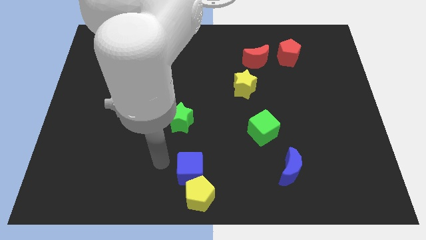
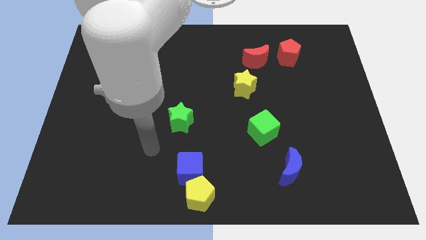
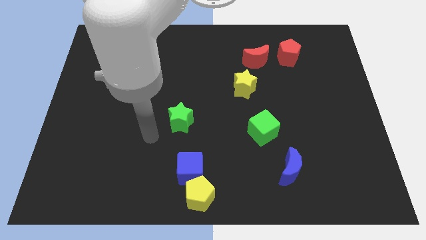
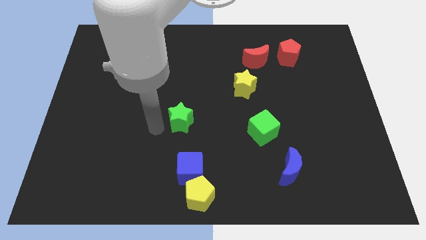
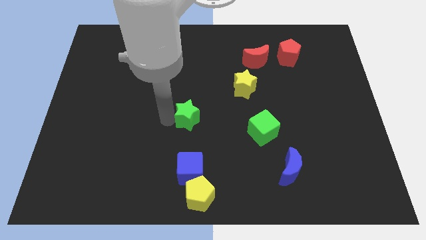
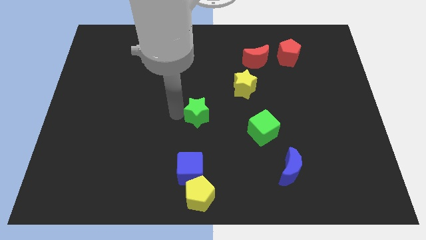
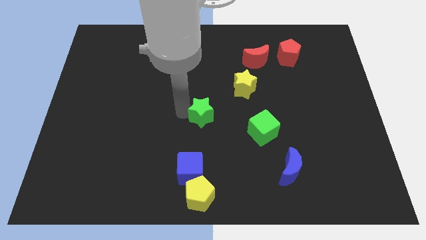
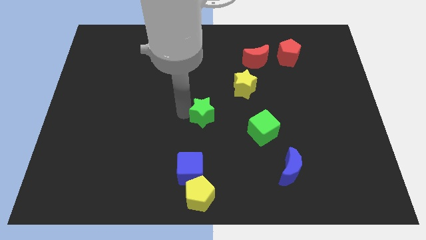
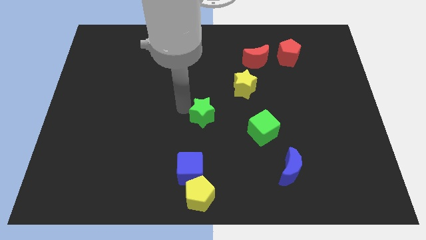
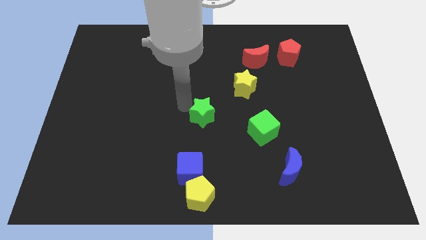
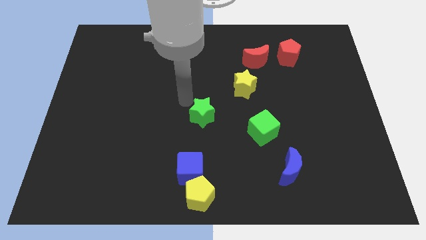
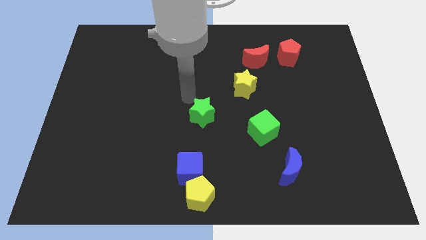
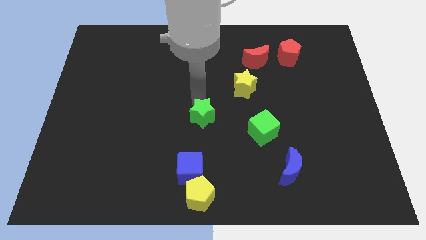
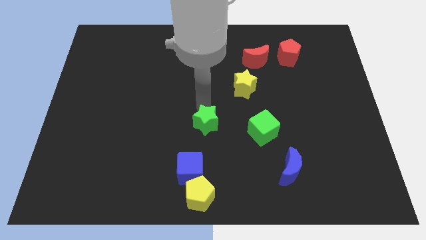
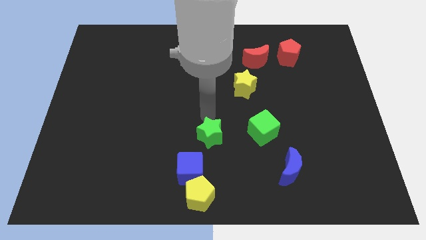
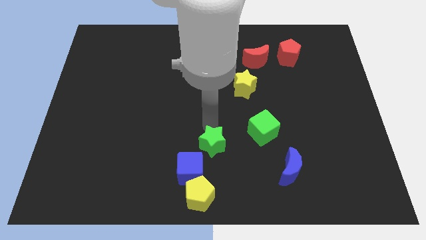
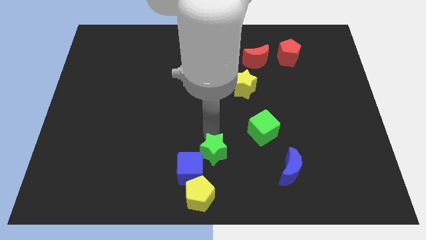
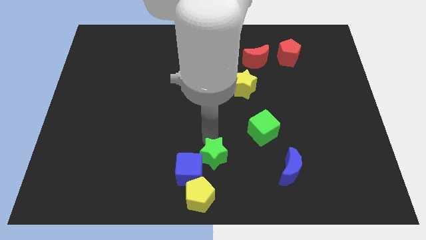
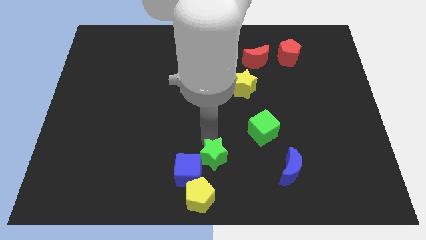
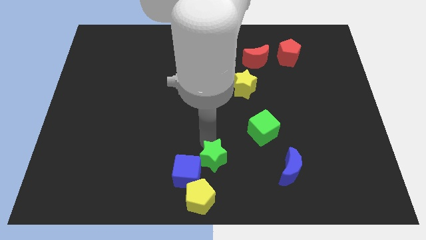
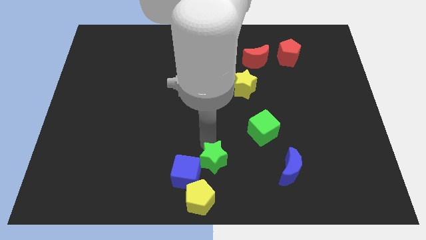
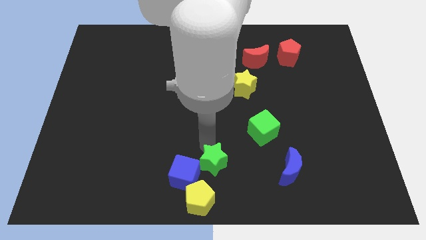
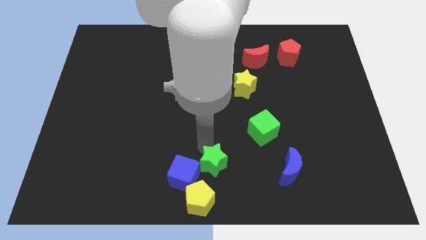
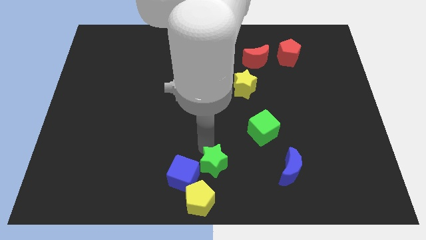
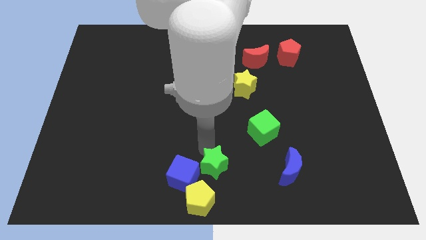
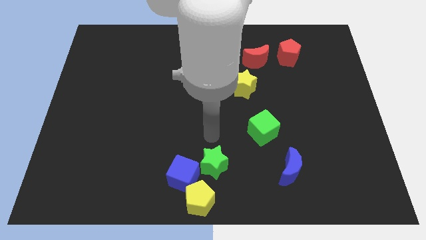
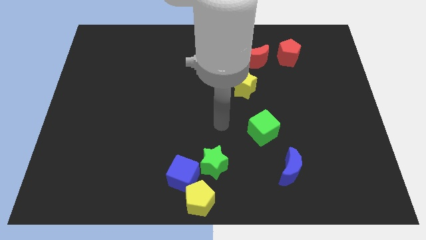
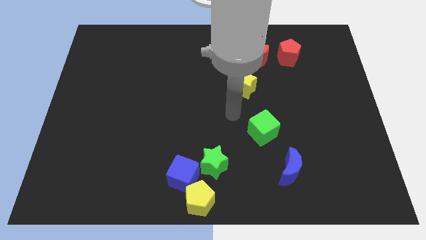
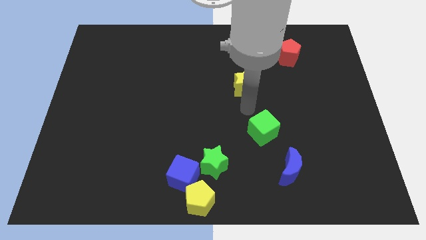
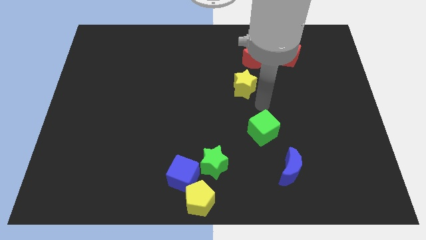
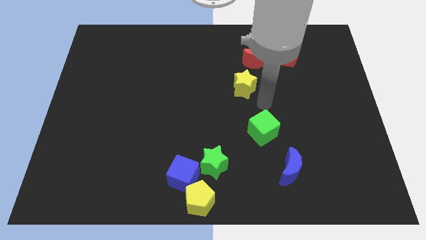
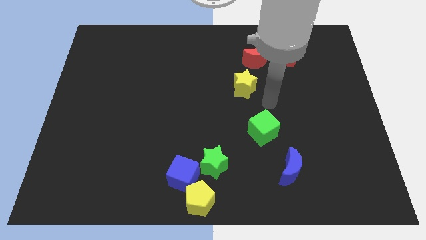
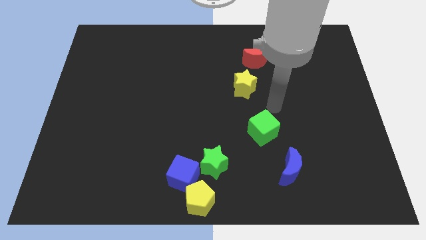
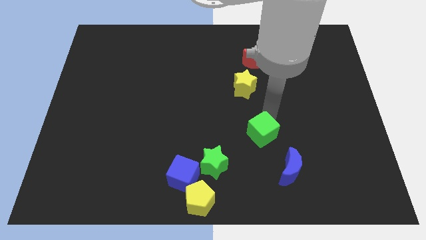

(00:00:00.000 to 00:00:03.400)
place the green star right to the blue cube

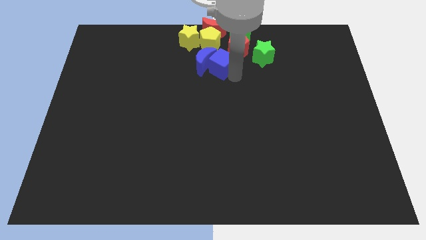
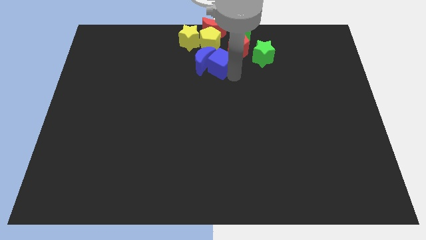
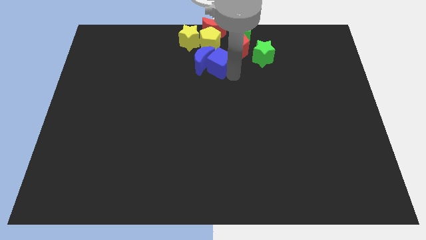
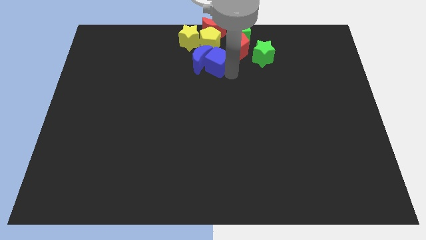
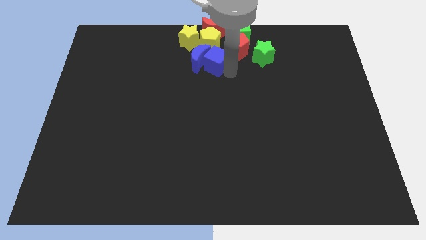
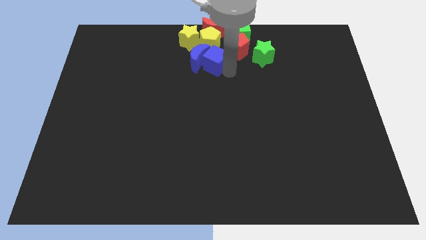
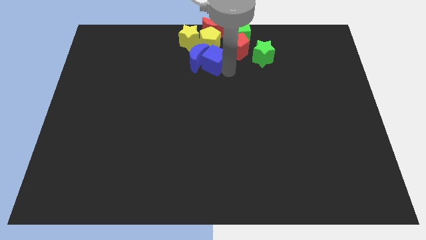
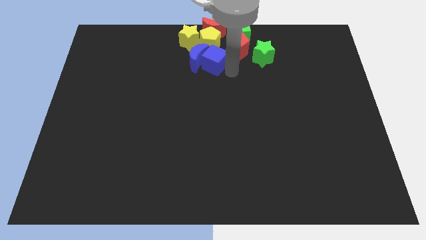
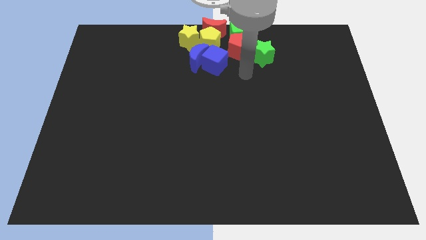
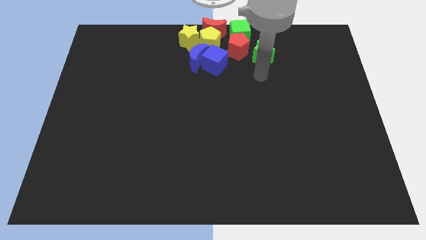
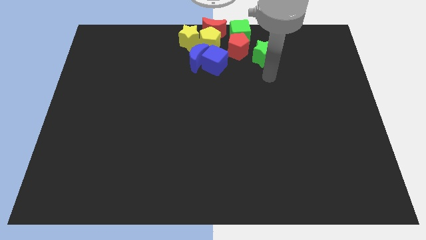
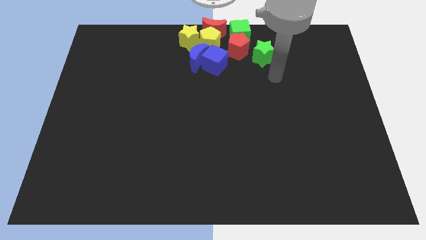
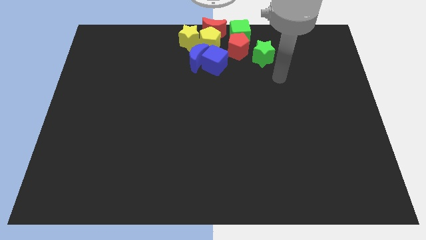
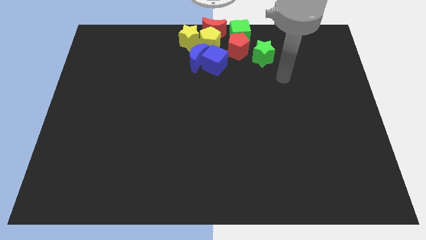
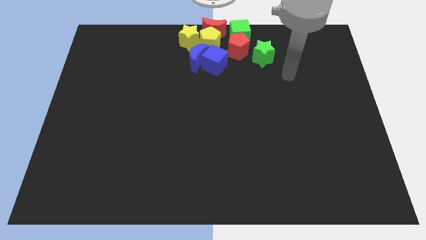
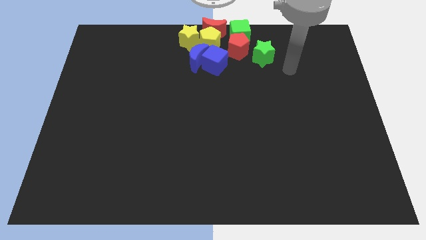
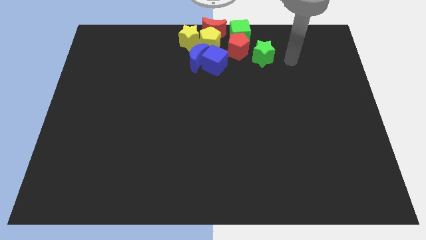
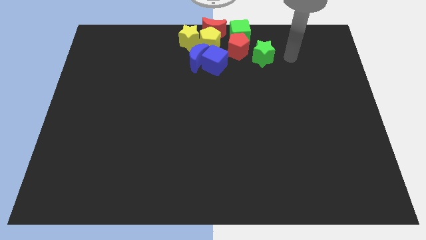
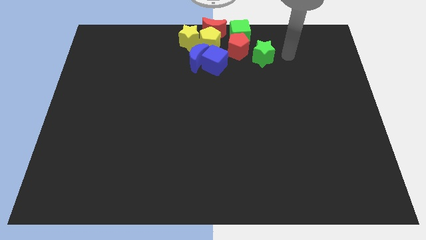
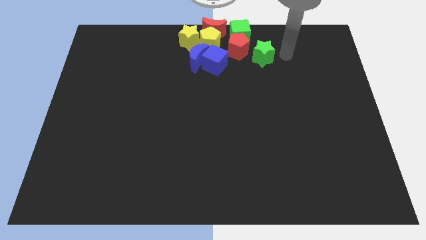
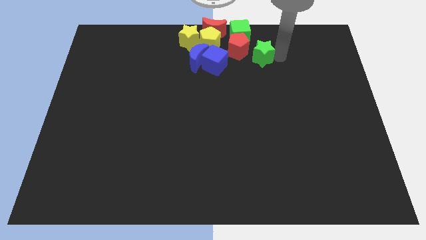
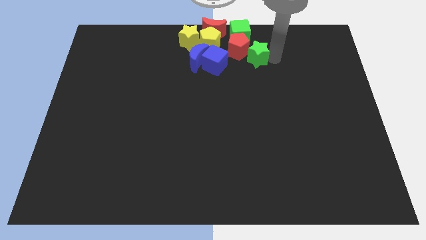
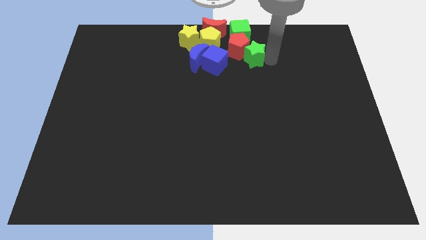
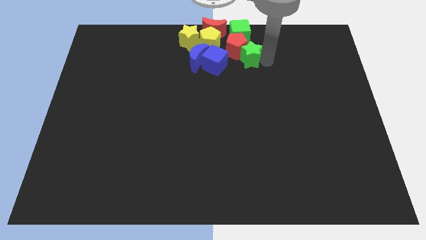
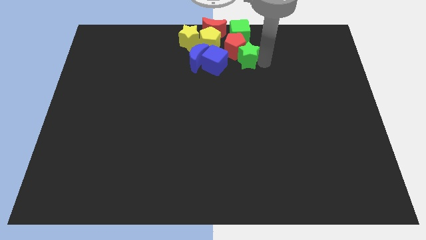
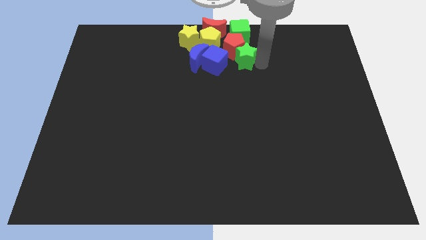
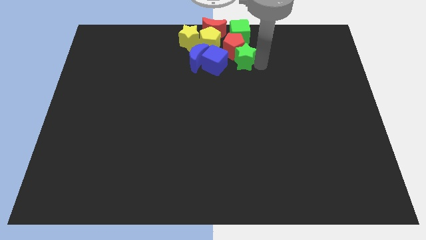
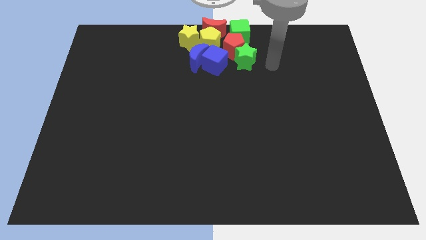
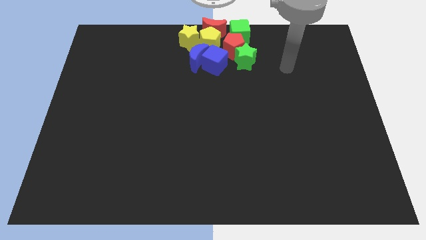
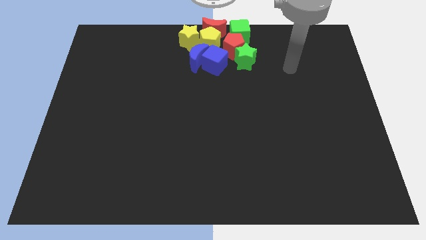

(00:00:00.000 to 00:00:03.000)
push the green star to bottom right of the red pentagon

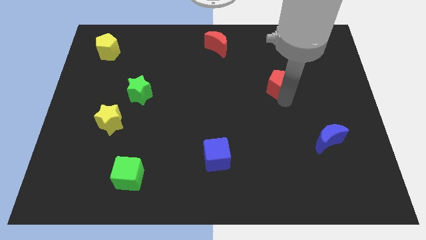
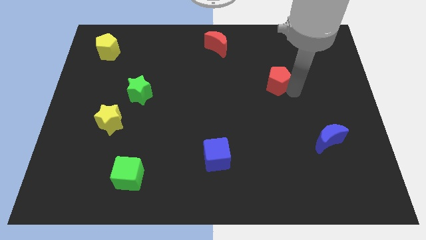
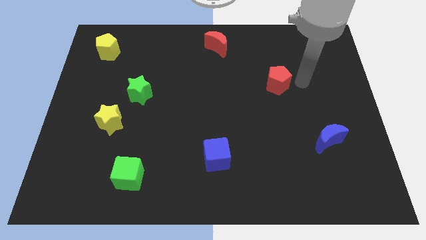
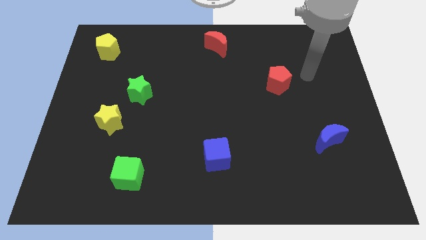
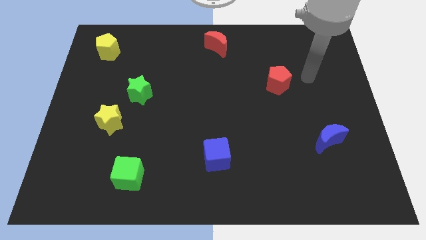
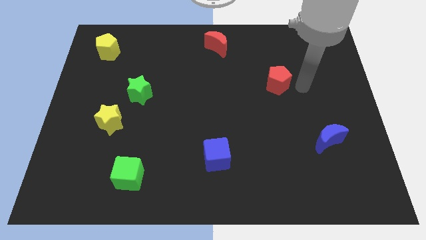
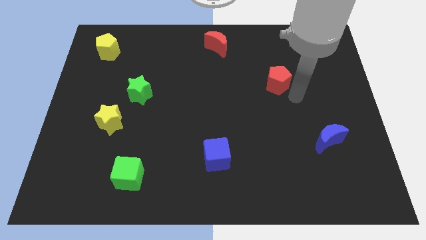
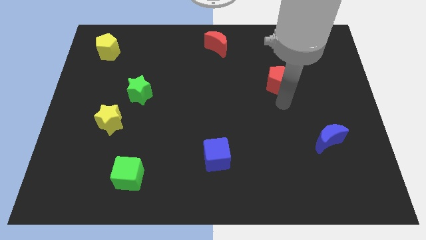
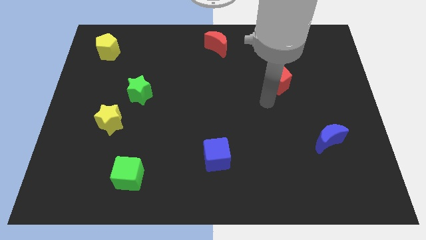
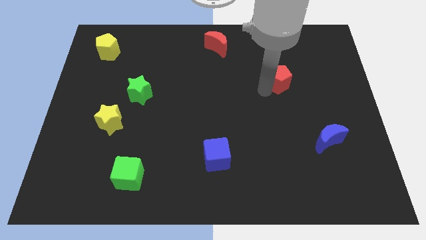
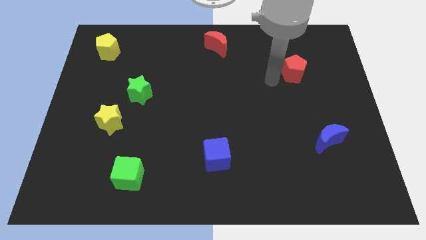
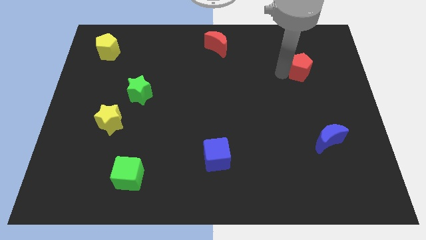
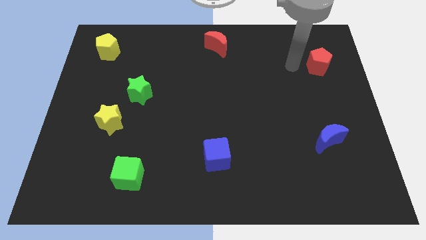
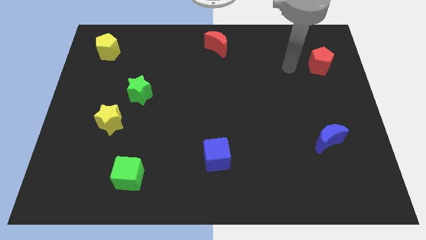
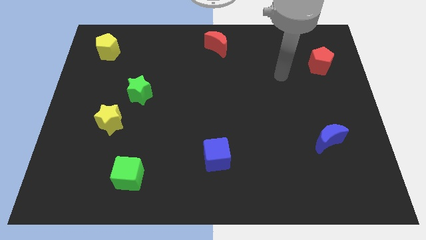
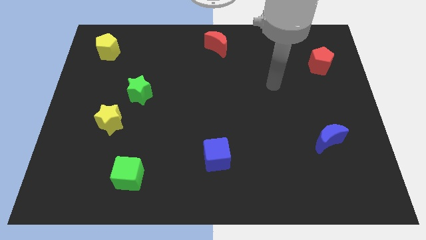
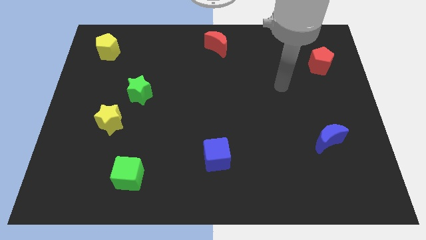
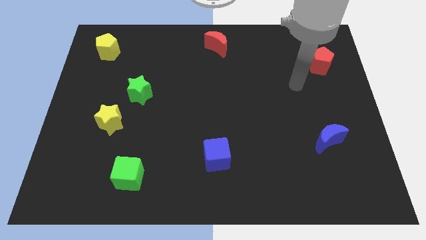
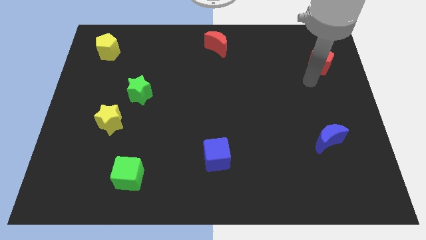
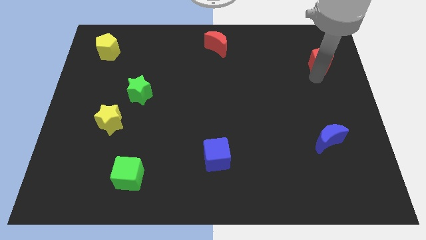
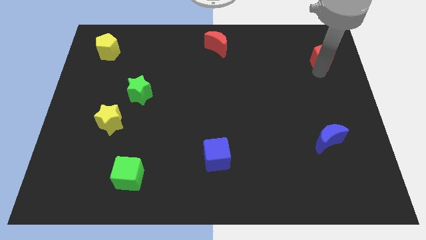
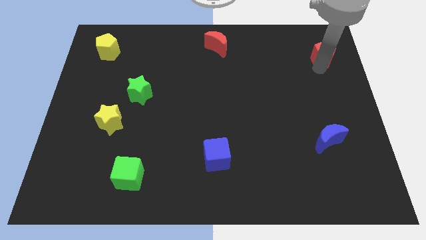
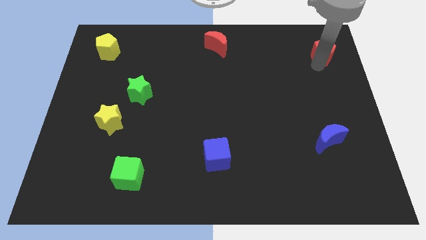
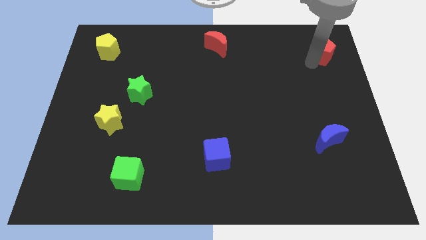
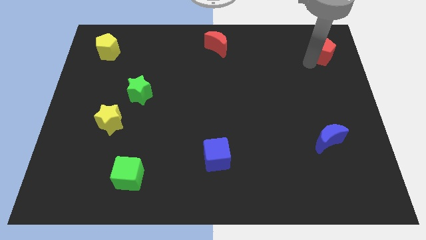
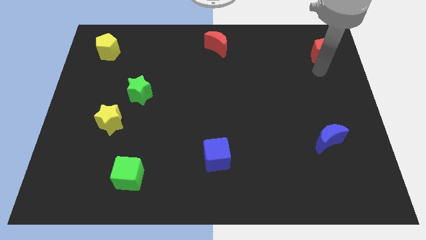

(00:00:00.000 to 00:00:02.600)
push the red pentagon towards the top right side of the board
